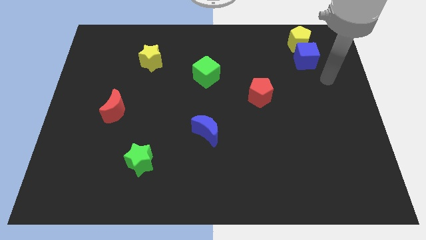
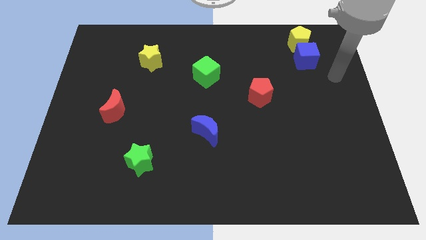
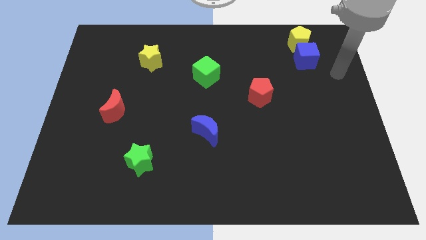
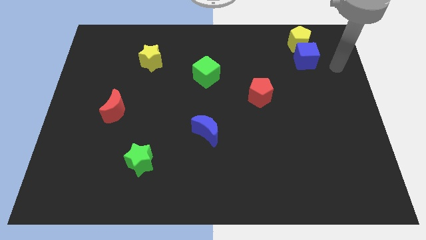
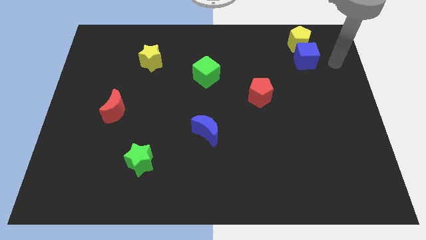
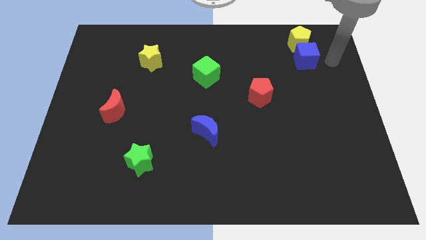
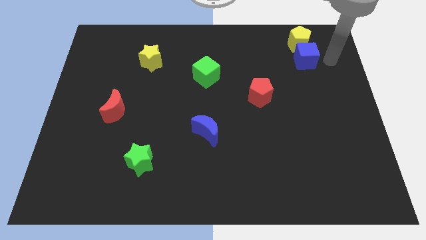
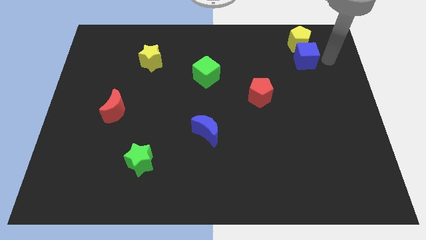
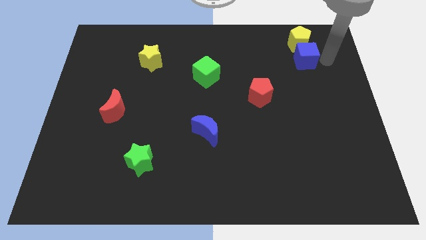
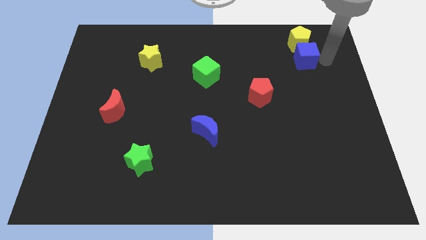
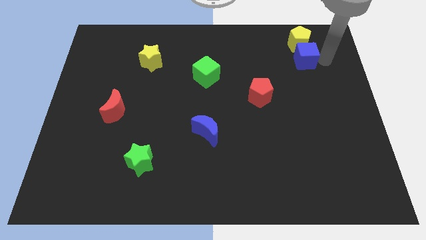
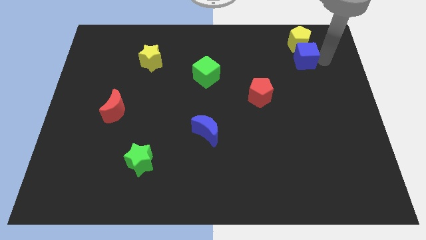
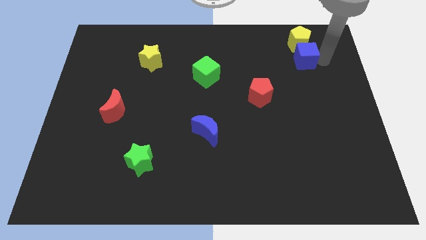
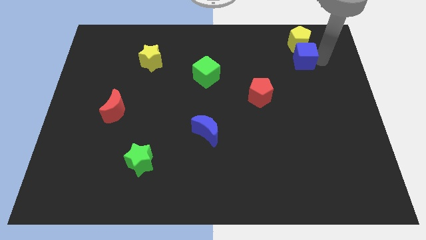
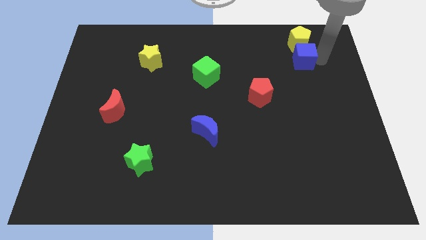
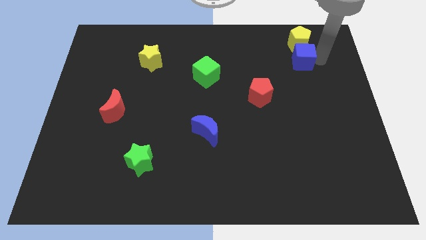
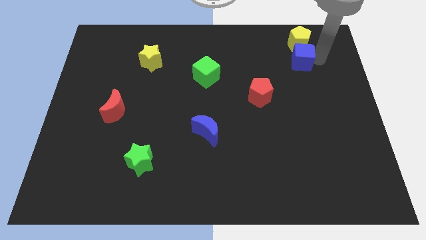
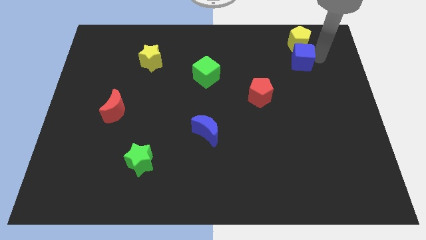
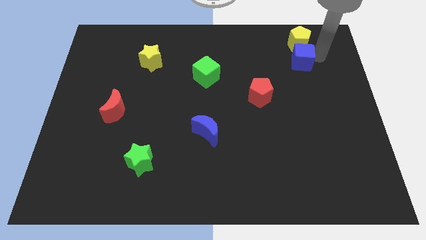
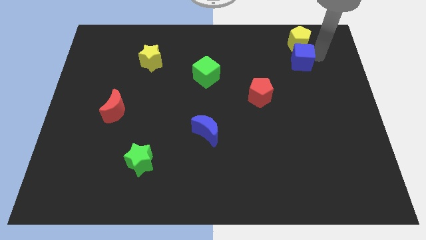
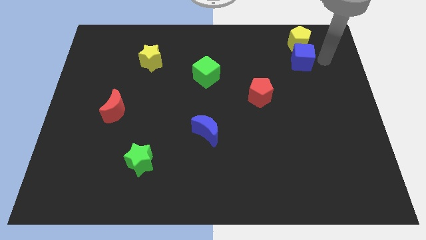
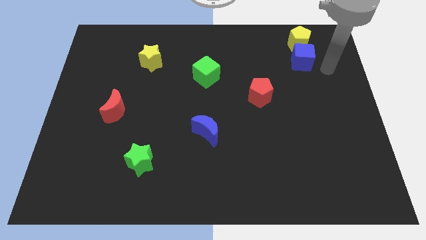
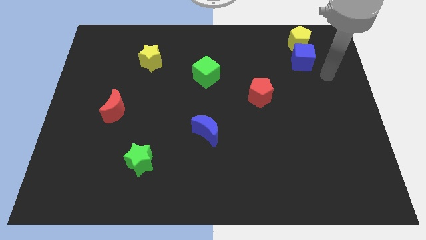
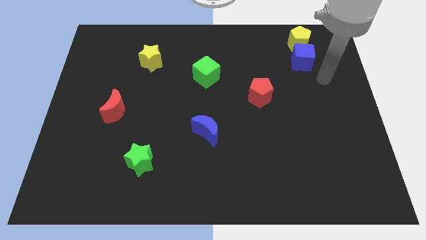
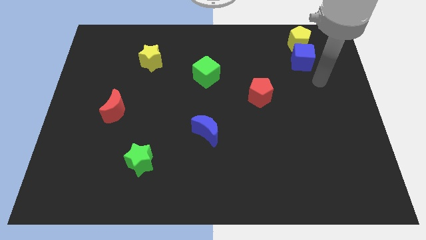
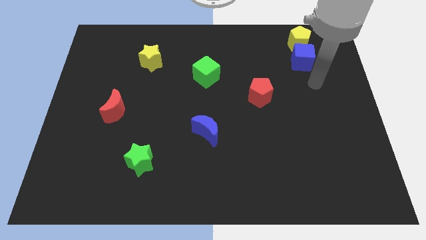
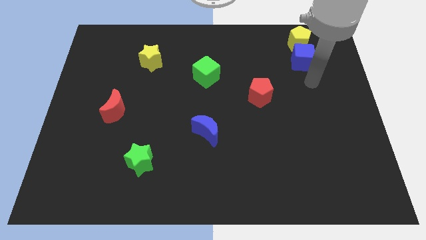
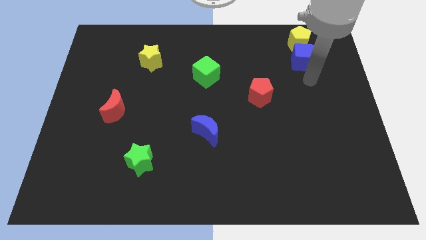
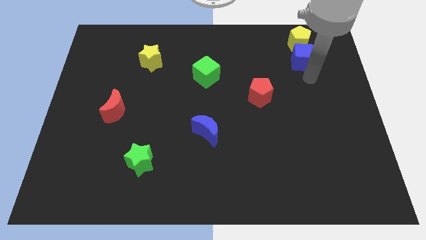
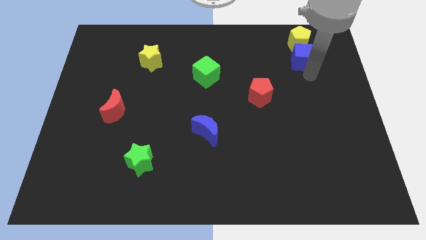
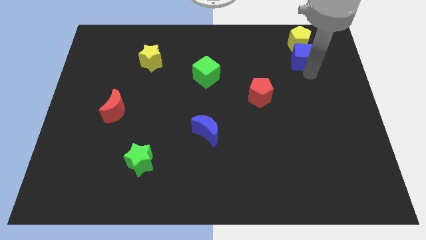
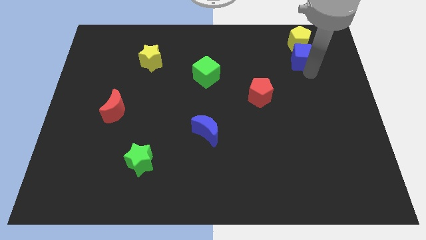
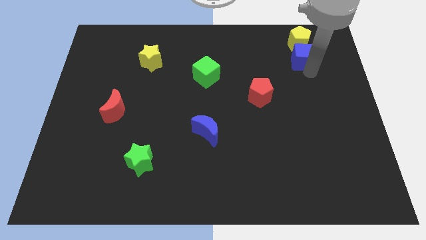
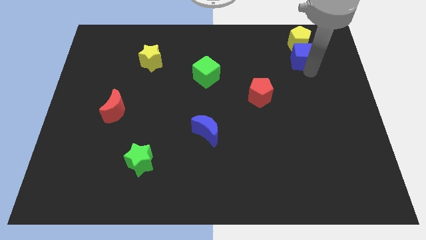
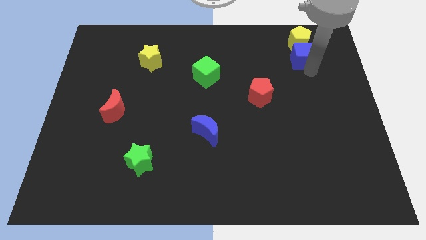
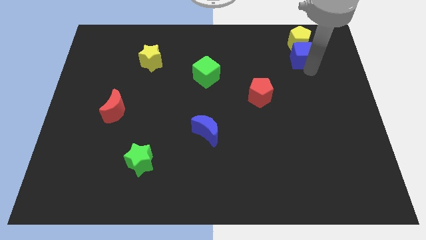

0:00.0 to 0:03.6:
adjust blue cube which is below yellow pentagon

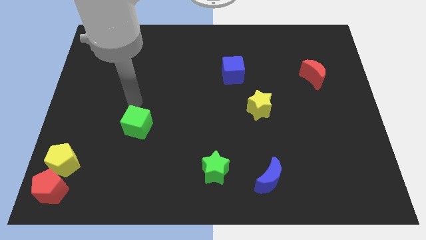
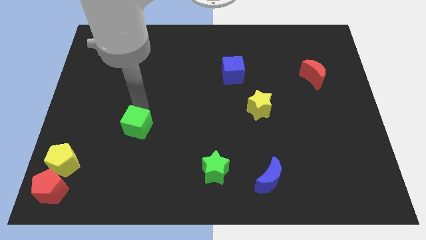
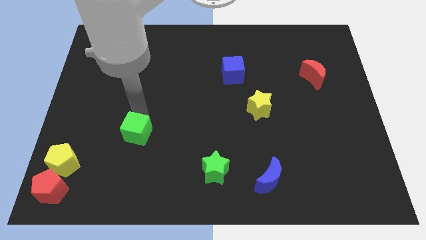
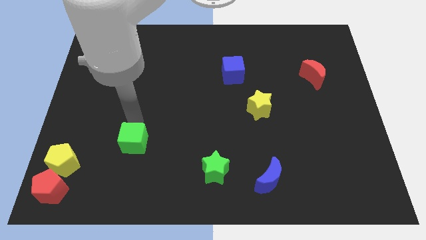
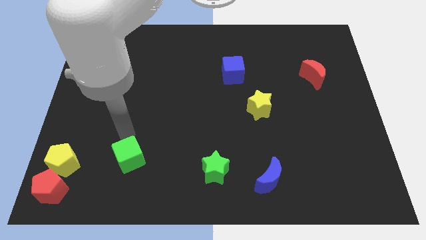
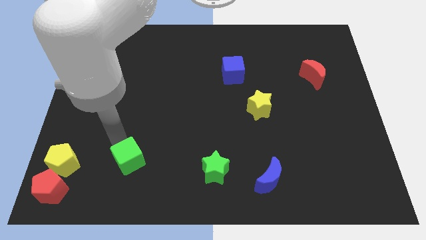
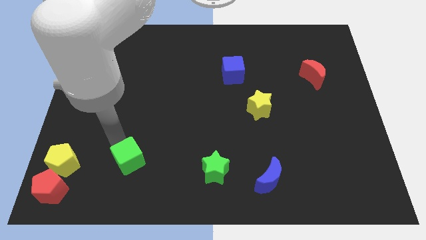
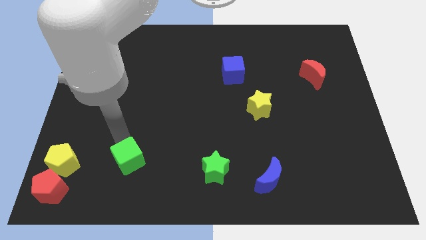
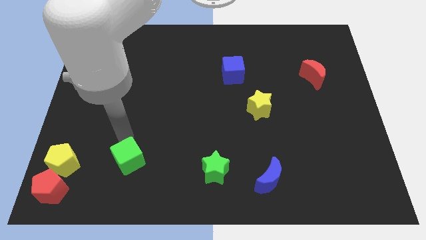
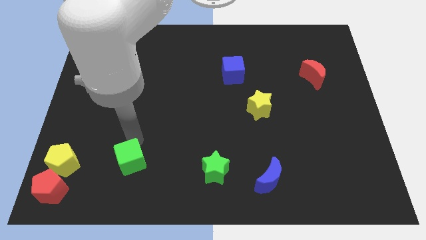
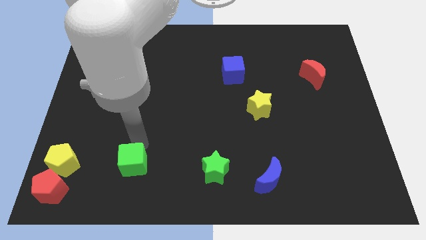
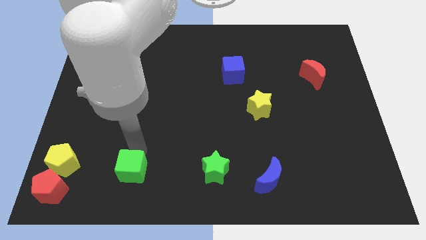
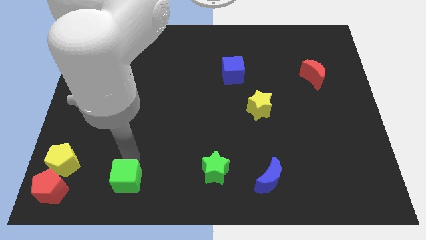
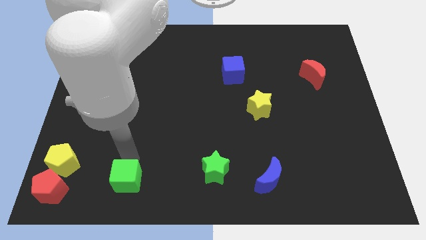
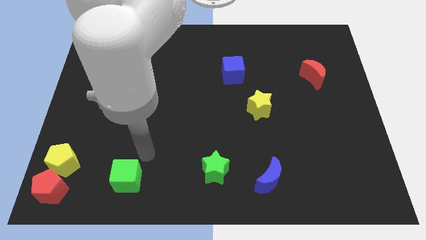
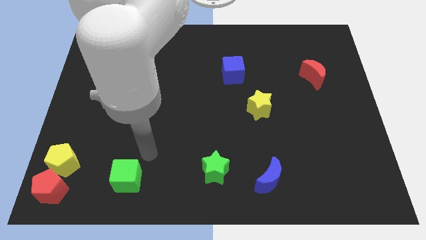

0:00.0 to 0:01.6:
place the green cube to the right of the red and yellow pentagons

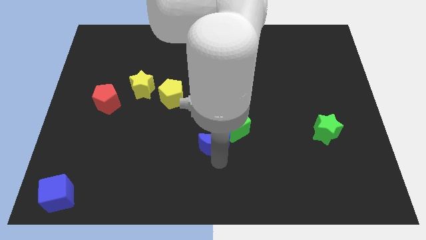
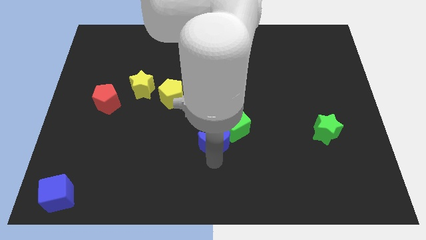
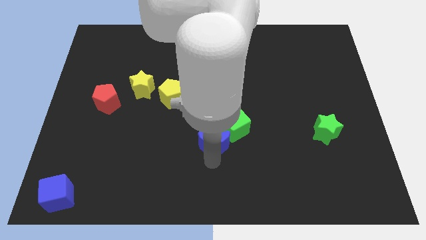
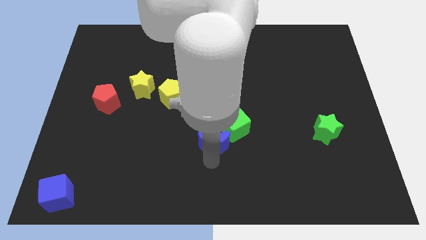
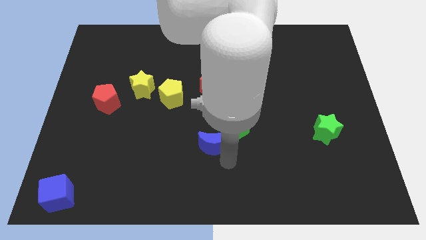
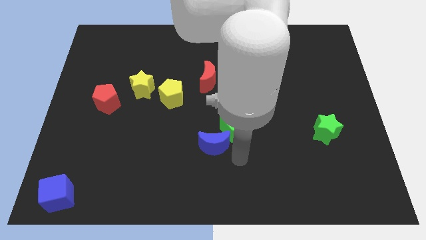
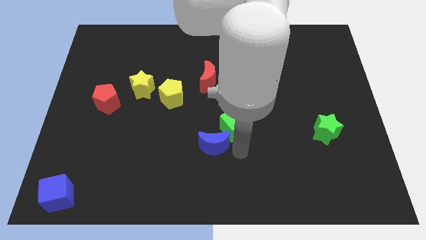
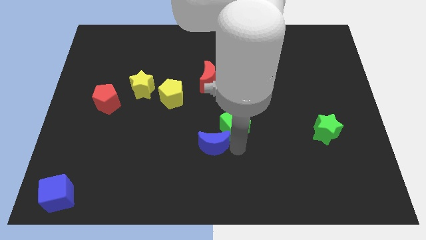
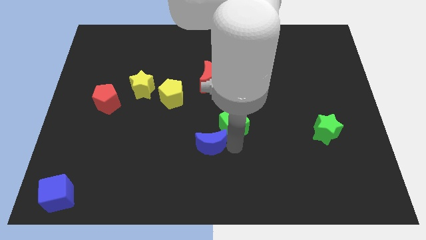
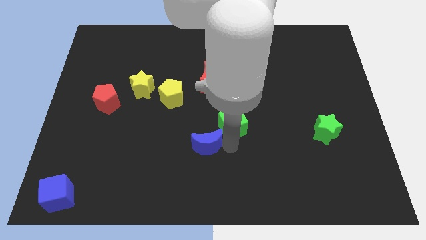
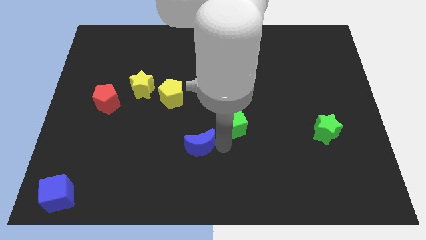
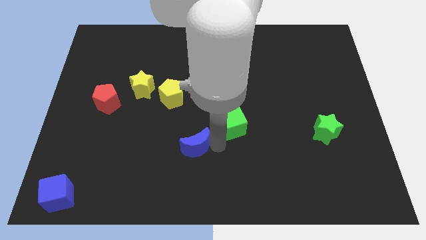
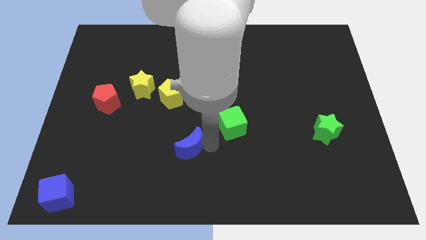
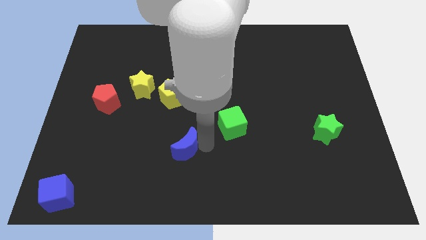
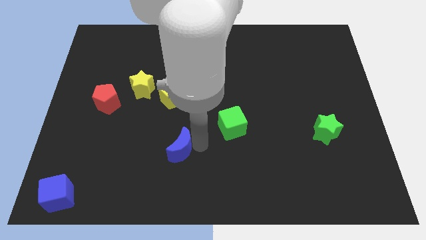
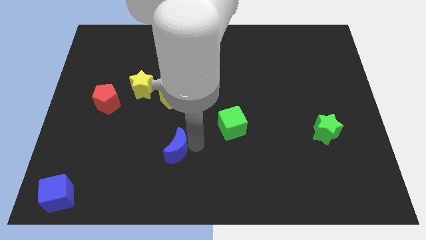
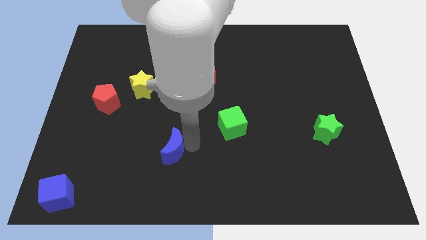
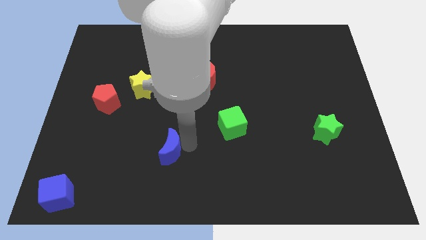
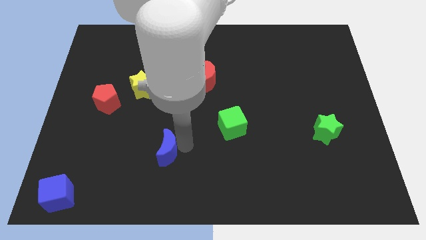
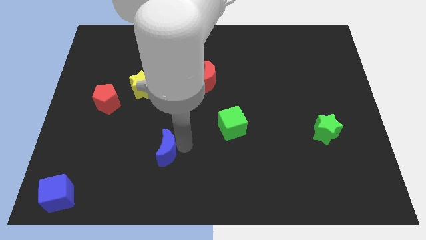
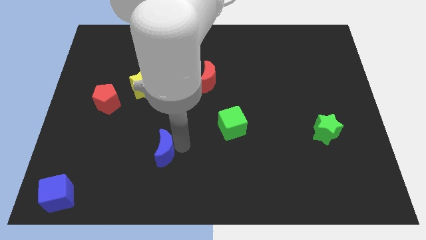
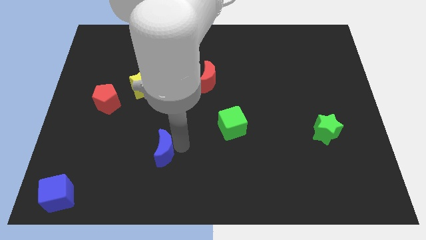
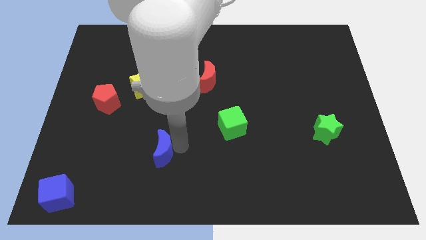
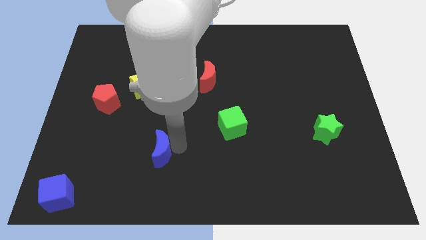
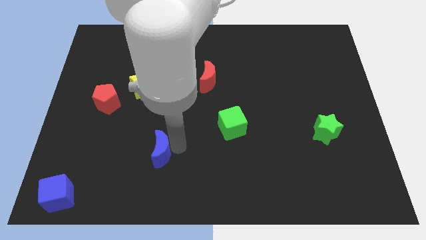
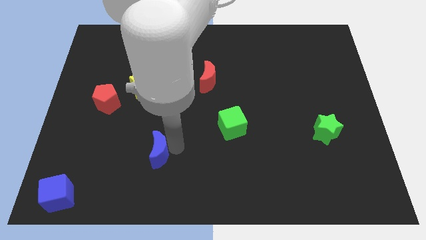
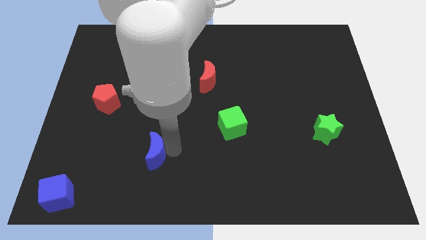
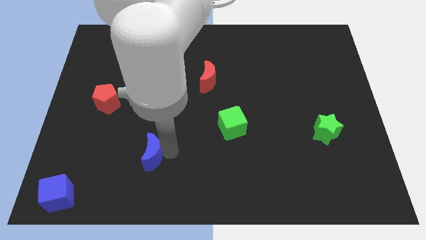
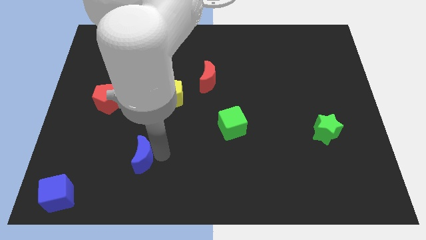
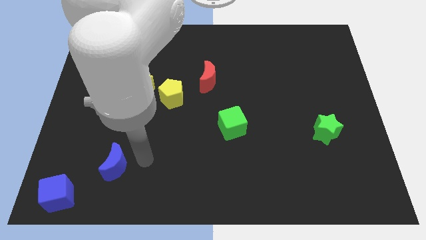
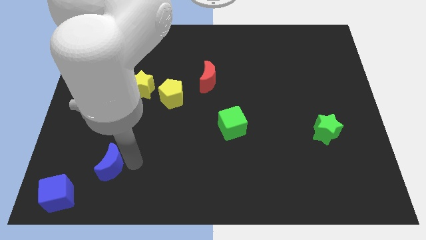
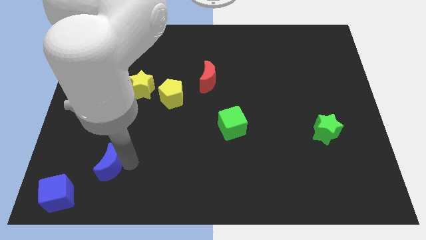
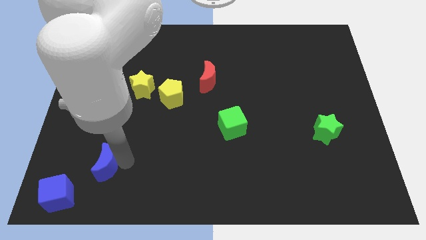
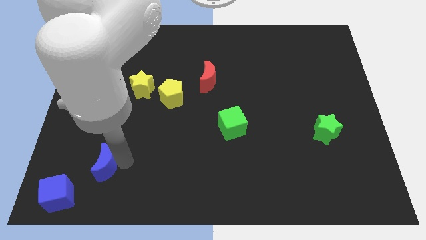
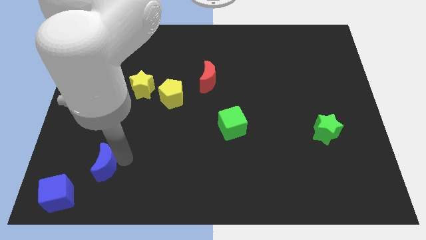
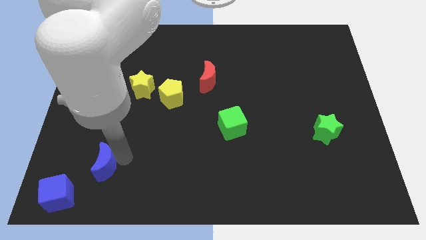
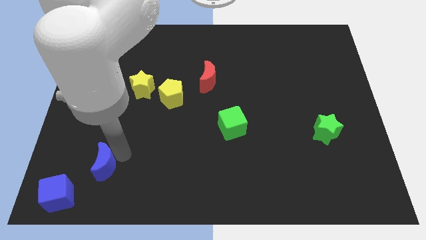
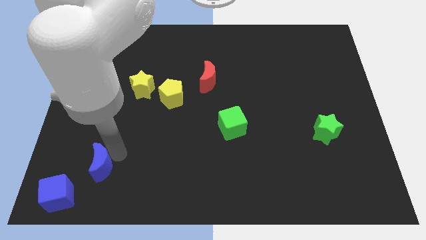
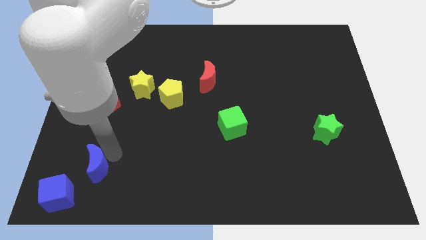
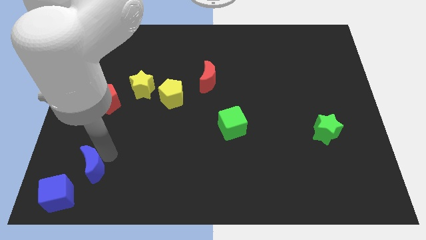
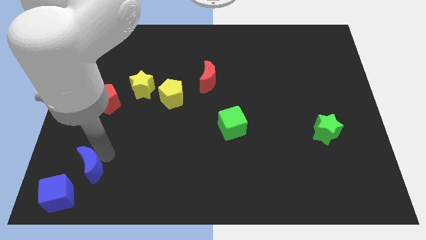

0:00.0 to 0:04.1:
separate the green cube and blue moon
